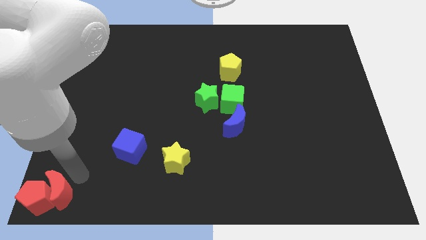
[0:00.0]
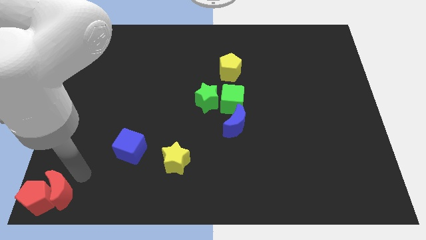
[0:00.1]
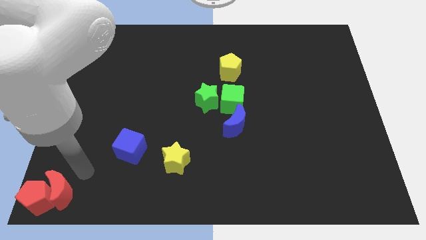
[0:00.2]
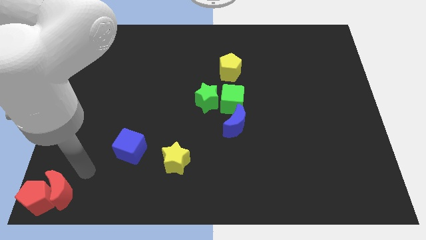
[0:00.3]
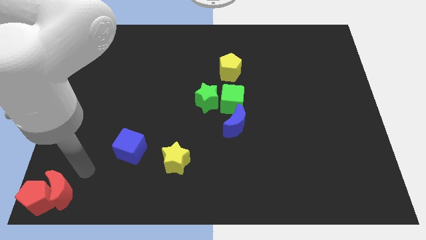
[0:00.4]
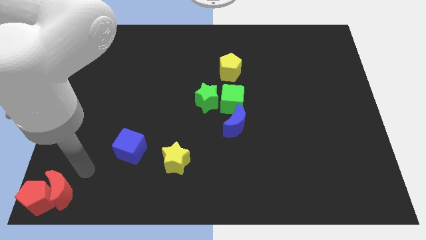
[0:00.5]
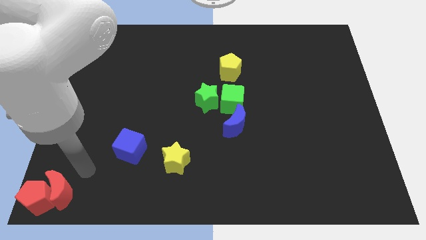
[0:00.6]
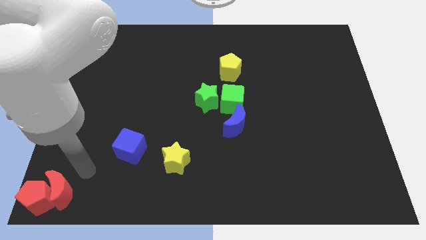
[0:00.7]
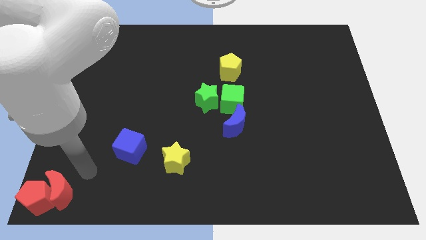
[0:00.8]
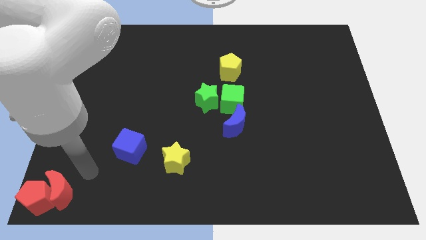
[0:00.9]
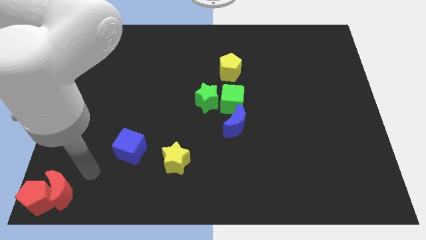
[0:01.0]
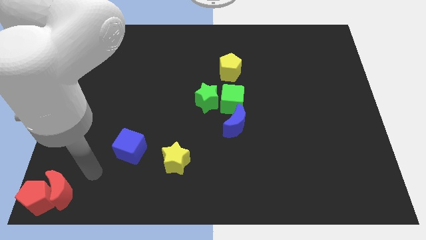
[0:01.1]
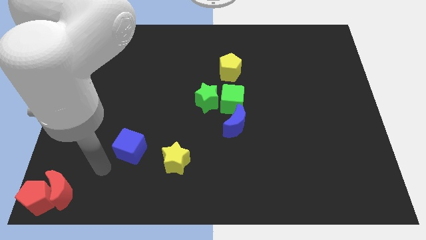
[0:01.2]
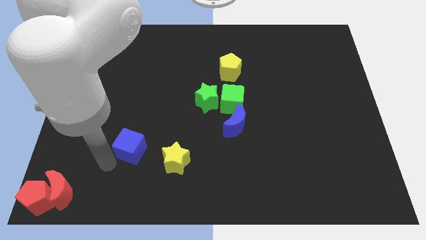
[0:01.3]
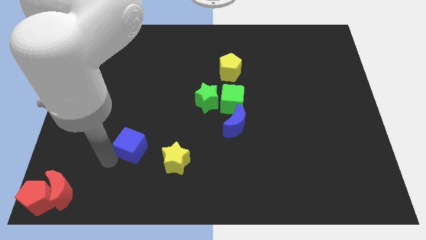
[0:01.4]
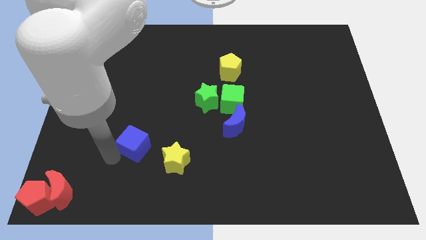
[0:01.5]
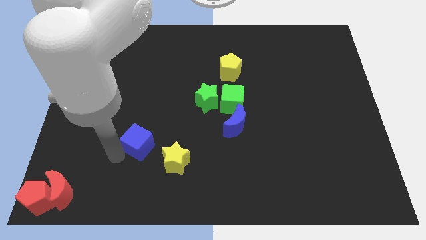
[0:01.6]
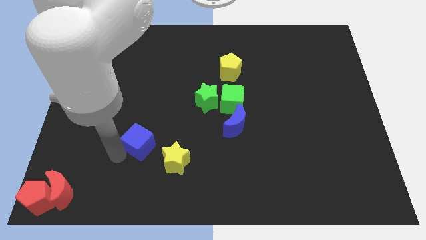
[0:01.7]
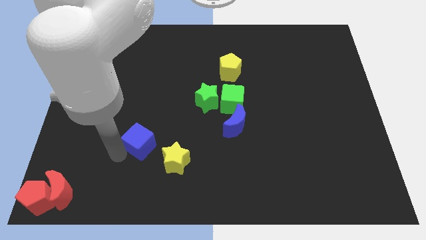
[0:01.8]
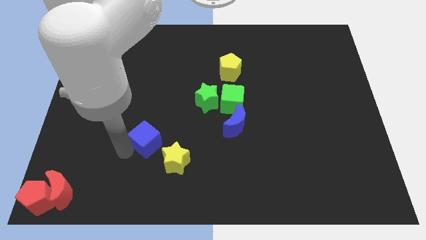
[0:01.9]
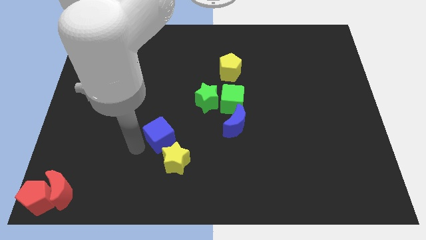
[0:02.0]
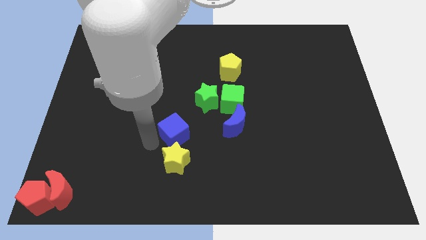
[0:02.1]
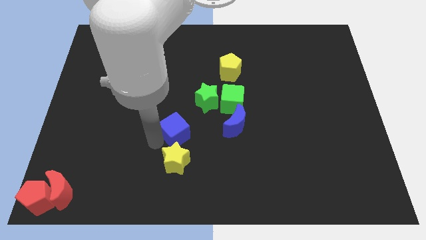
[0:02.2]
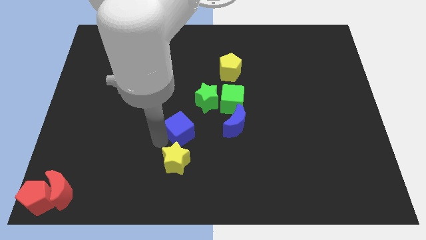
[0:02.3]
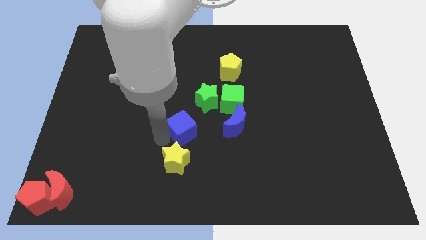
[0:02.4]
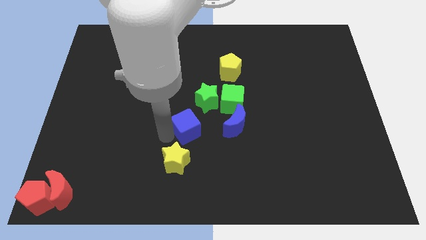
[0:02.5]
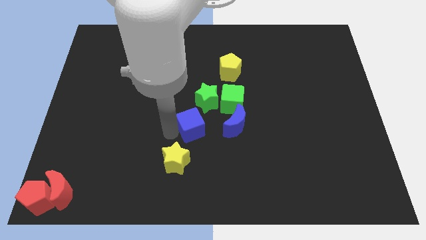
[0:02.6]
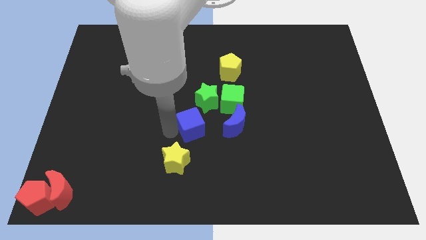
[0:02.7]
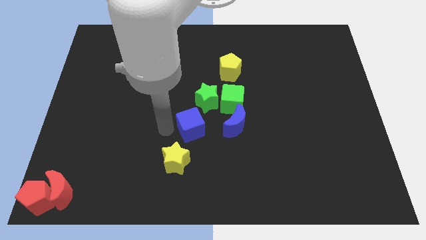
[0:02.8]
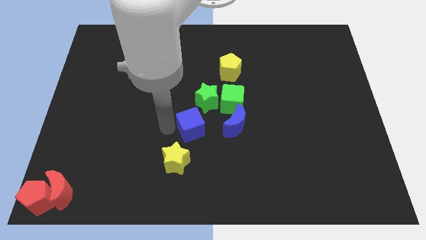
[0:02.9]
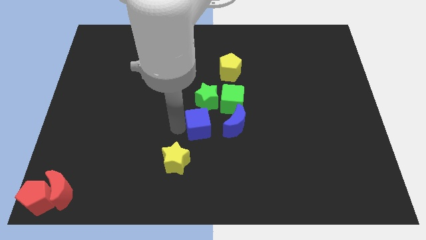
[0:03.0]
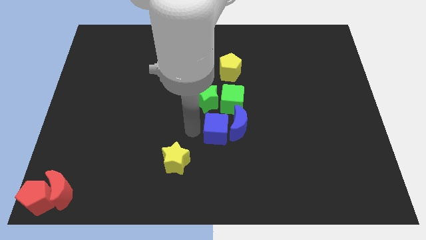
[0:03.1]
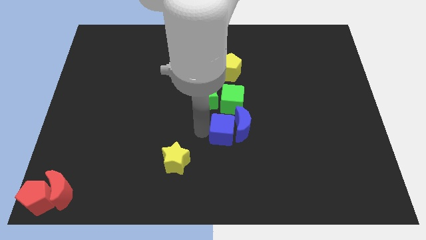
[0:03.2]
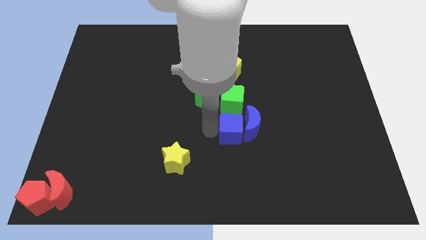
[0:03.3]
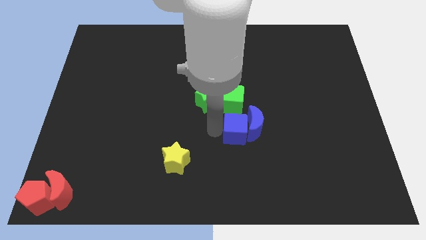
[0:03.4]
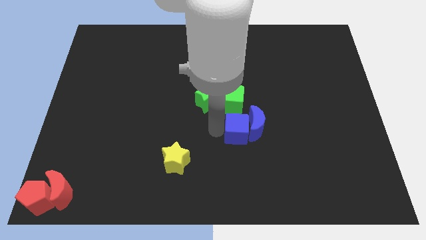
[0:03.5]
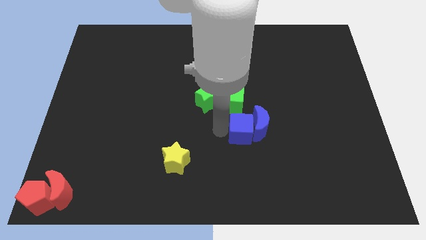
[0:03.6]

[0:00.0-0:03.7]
move the blue cube to the left of the blue crescent

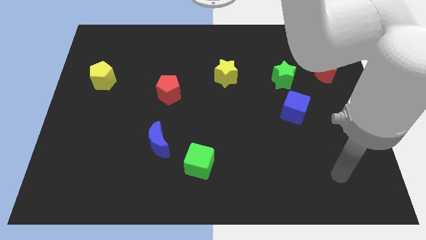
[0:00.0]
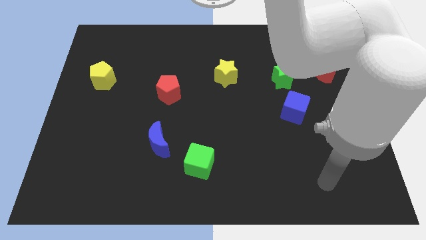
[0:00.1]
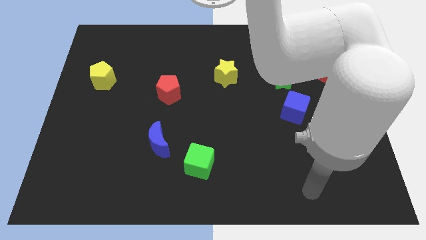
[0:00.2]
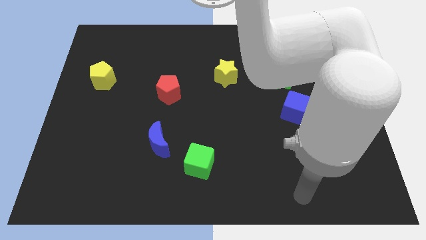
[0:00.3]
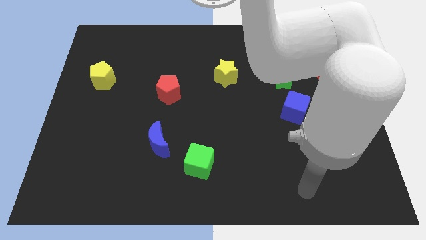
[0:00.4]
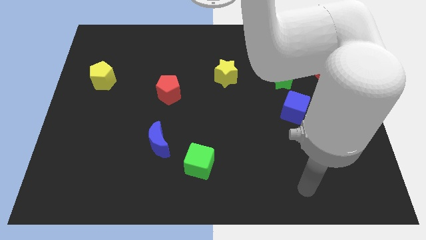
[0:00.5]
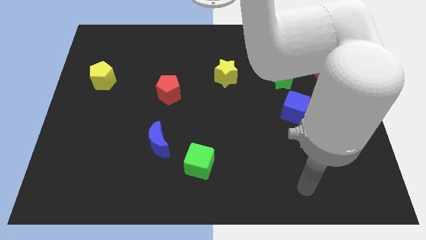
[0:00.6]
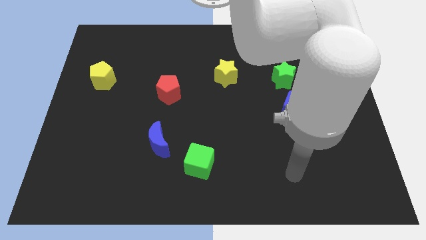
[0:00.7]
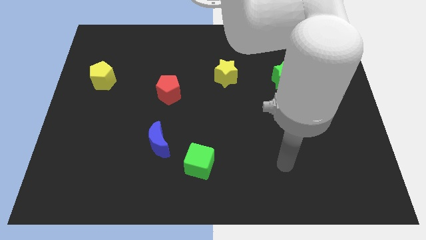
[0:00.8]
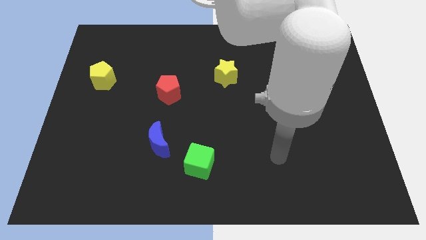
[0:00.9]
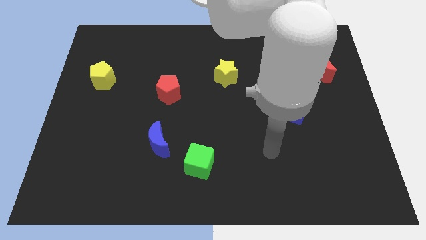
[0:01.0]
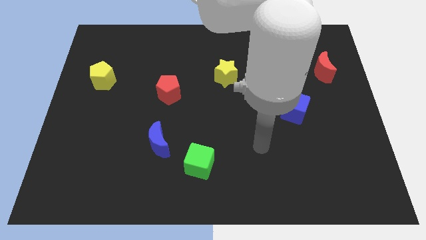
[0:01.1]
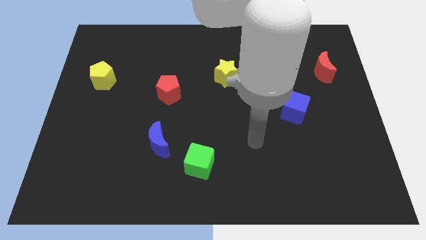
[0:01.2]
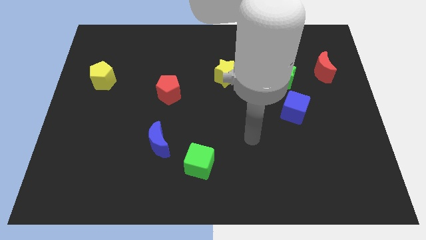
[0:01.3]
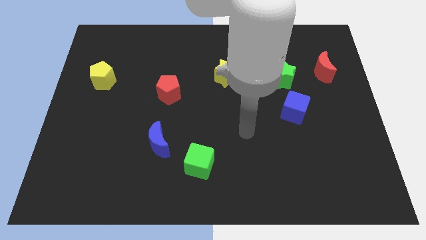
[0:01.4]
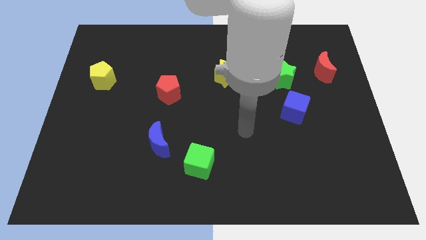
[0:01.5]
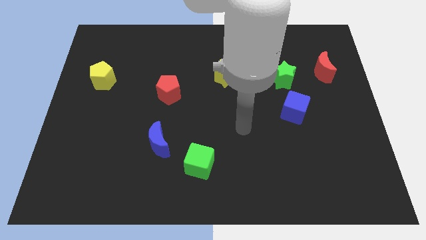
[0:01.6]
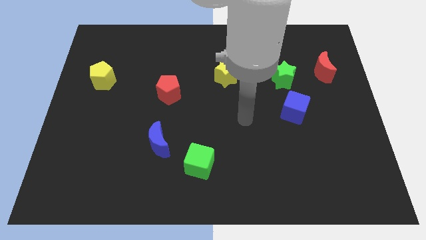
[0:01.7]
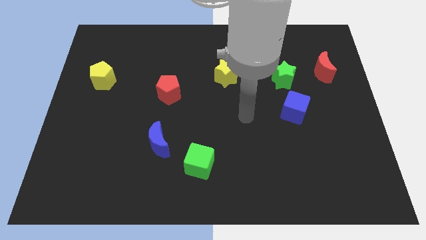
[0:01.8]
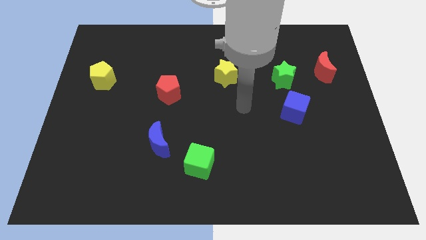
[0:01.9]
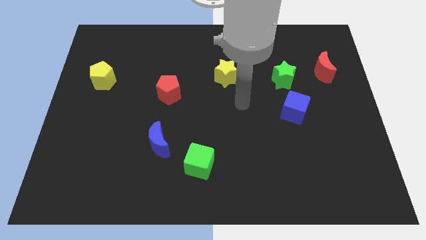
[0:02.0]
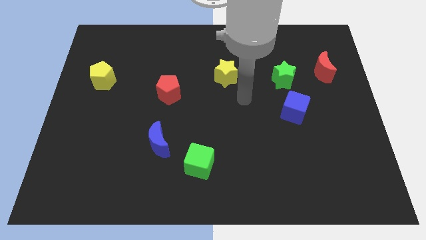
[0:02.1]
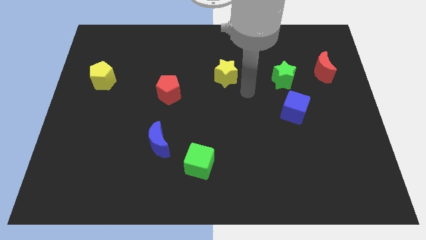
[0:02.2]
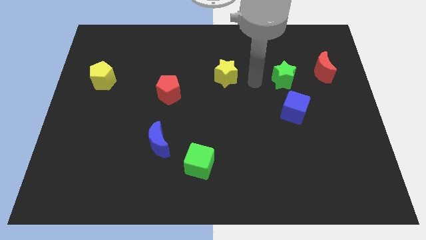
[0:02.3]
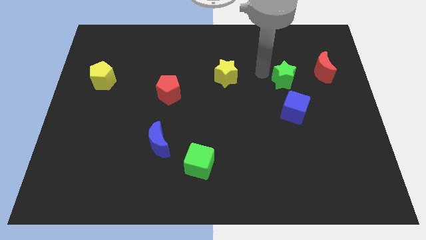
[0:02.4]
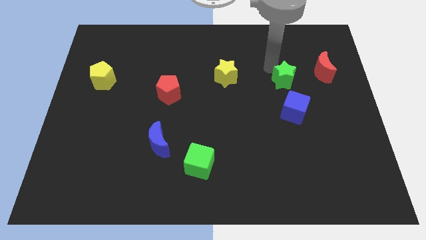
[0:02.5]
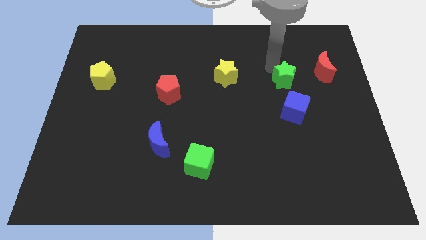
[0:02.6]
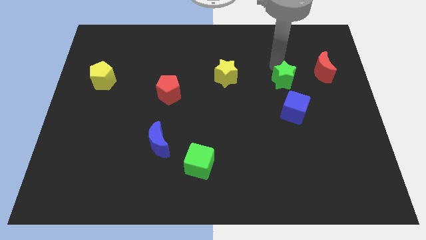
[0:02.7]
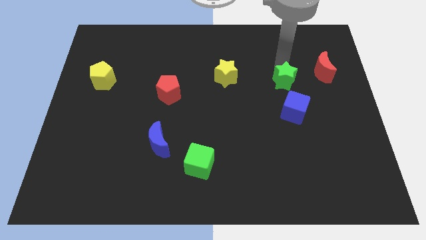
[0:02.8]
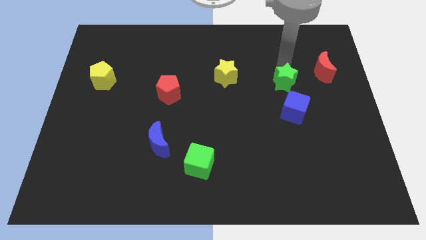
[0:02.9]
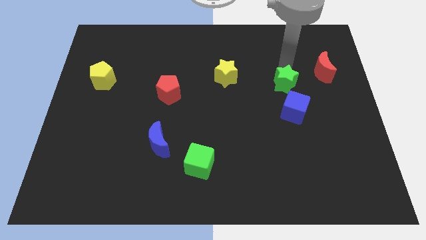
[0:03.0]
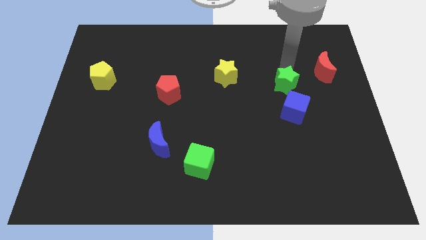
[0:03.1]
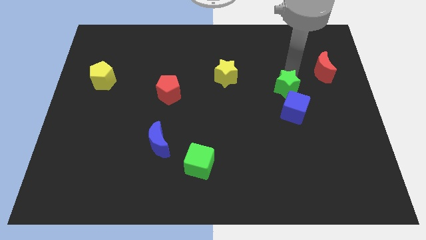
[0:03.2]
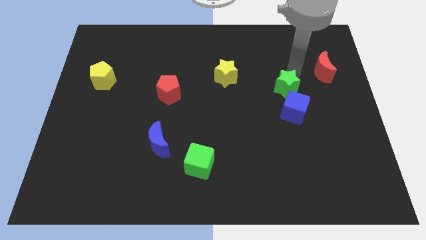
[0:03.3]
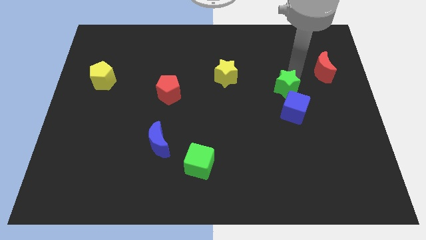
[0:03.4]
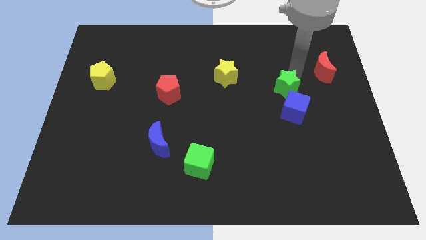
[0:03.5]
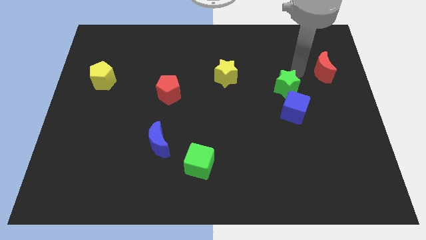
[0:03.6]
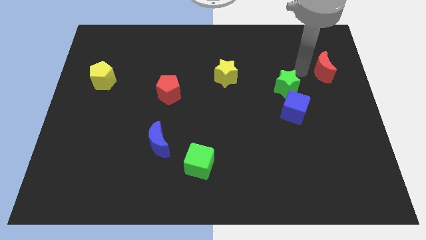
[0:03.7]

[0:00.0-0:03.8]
move the green star to the top of the blue cube

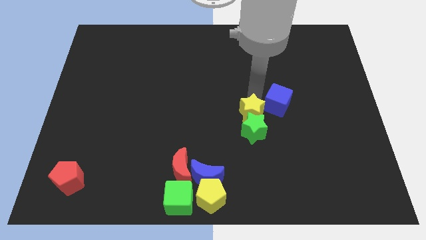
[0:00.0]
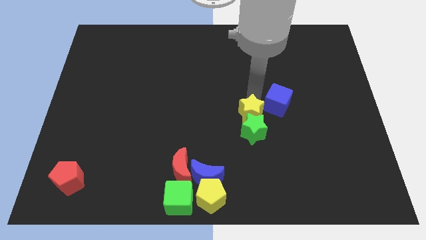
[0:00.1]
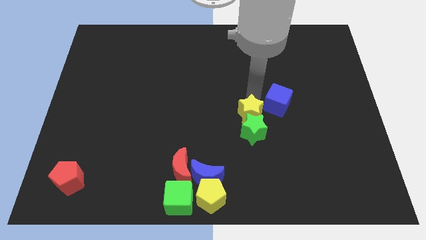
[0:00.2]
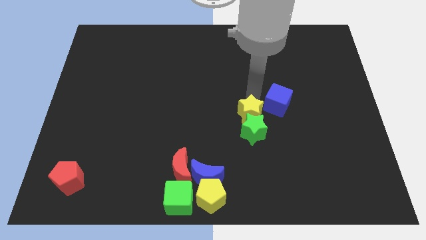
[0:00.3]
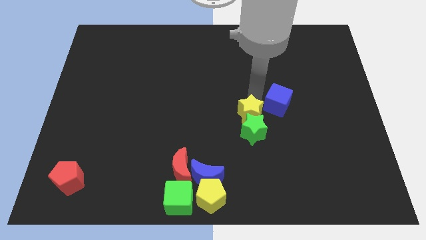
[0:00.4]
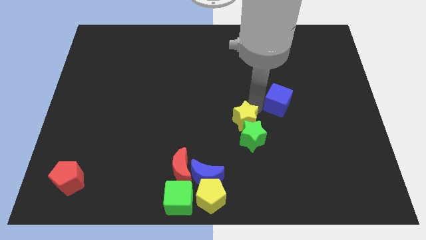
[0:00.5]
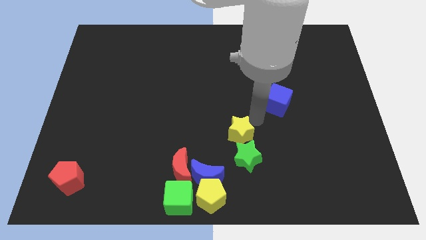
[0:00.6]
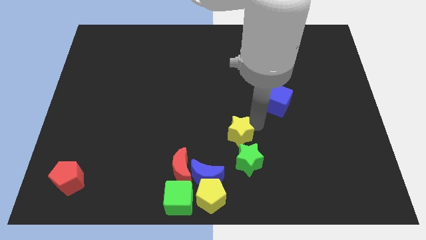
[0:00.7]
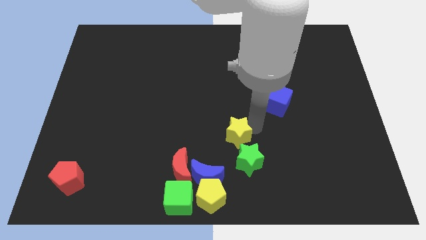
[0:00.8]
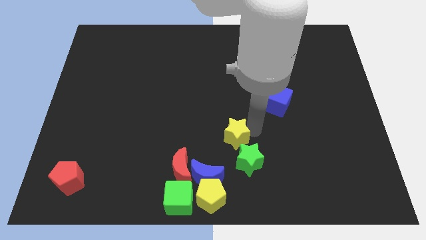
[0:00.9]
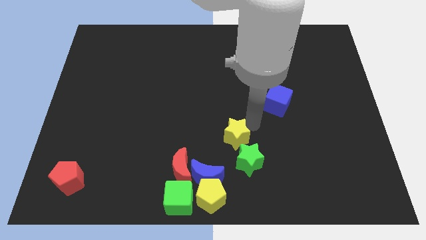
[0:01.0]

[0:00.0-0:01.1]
push yellow star slightly towards blue crescent

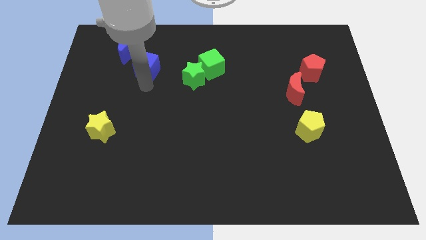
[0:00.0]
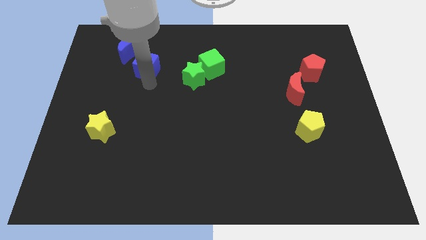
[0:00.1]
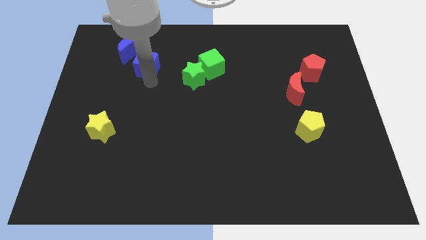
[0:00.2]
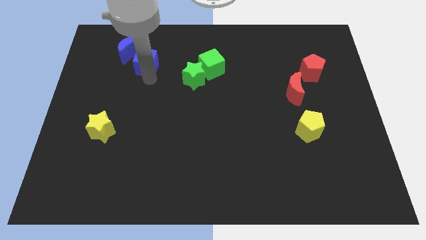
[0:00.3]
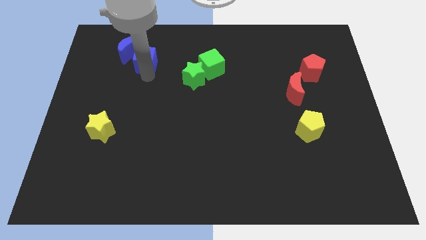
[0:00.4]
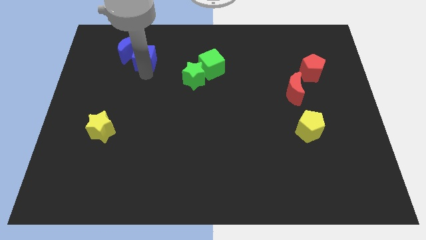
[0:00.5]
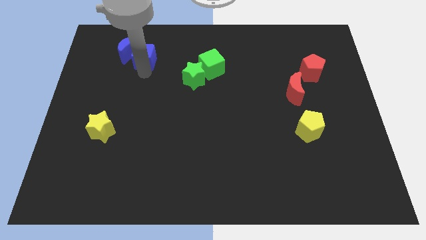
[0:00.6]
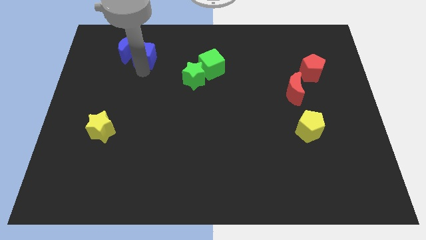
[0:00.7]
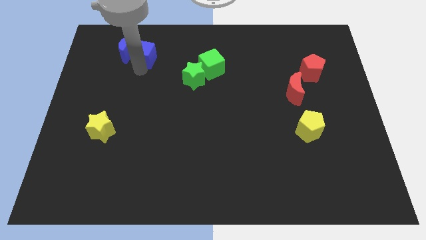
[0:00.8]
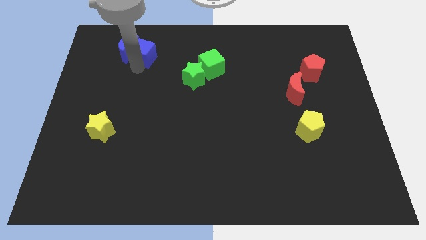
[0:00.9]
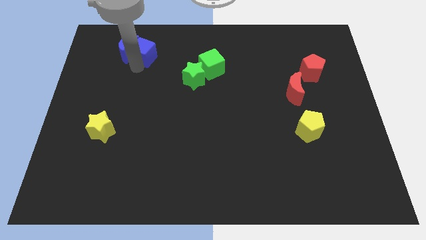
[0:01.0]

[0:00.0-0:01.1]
push the blue cube to the right of the blue crescent
